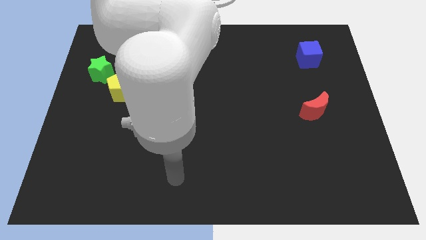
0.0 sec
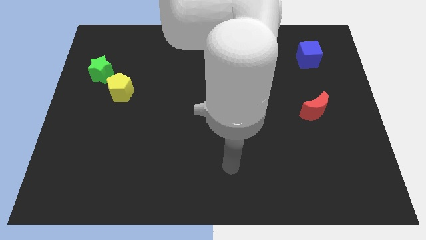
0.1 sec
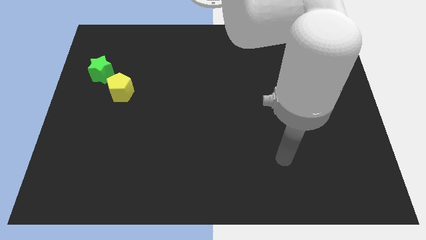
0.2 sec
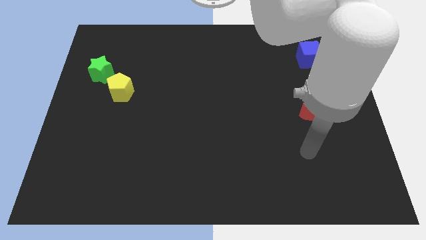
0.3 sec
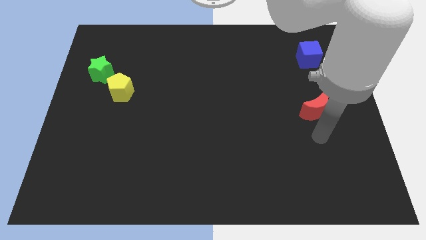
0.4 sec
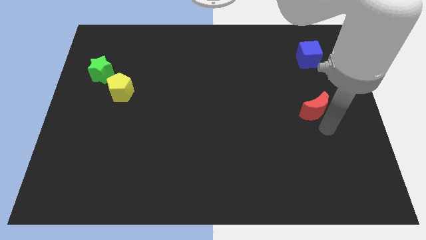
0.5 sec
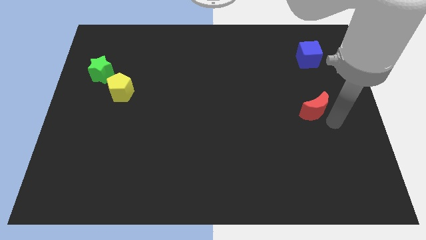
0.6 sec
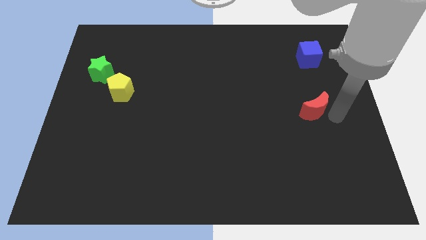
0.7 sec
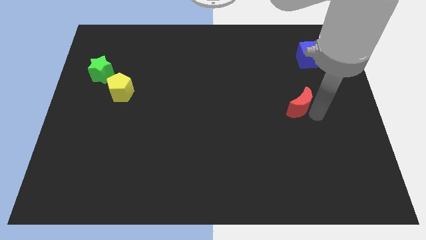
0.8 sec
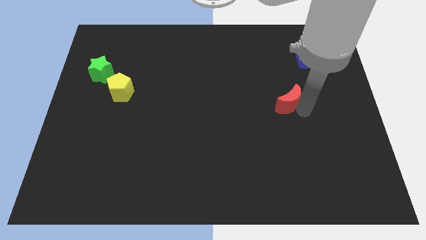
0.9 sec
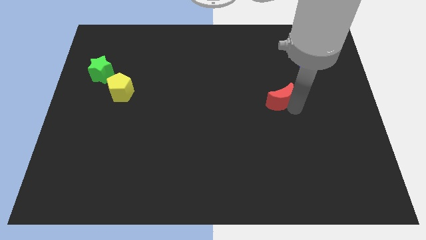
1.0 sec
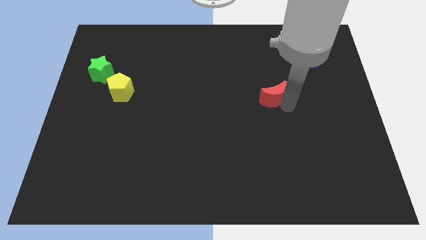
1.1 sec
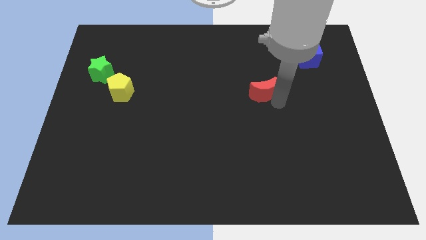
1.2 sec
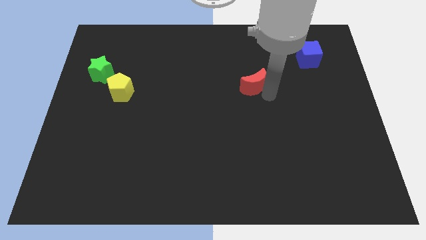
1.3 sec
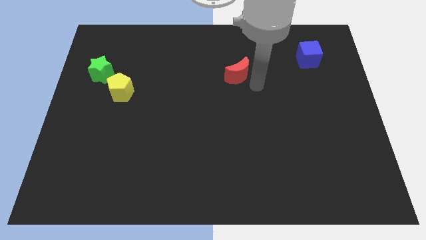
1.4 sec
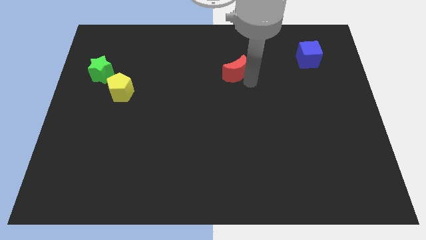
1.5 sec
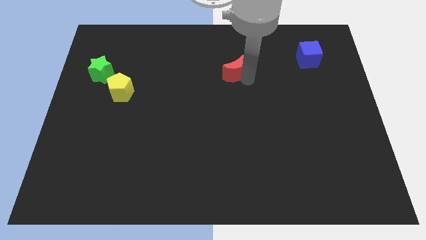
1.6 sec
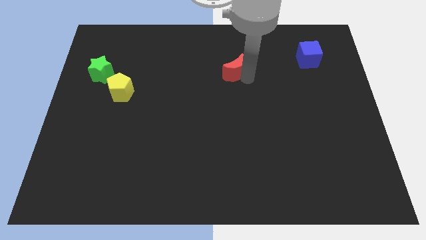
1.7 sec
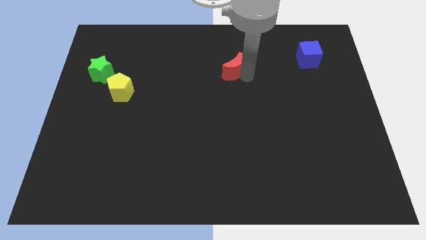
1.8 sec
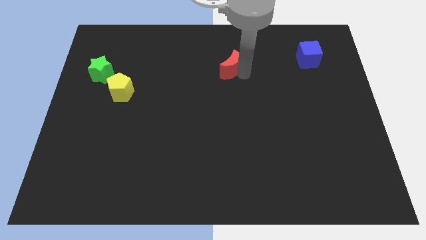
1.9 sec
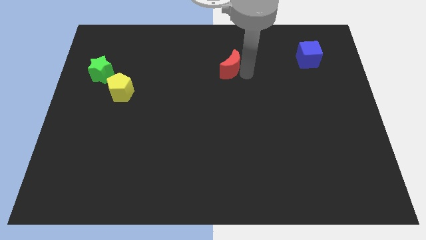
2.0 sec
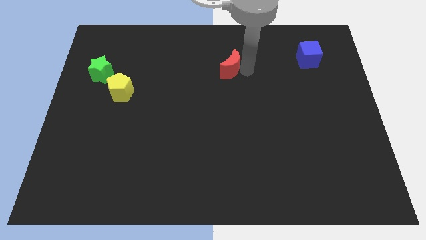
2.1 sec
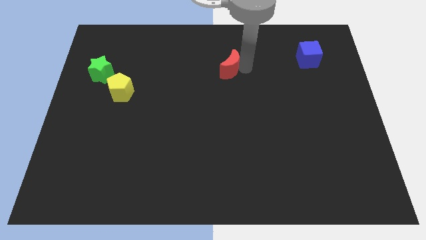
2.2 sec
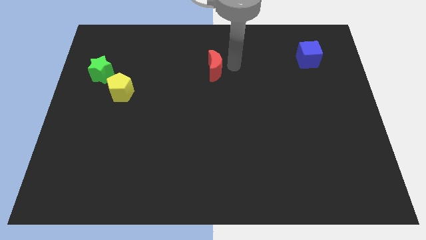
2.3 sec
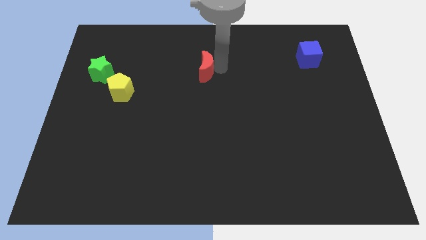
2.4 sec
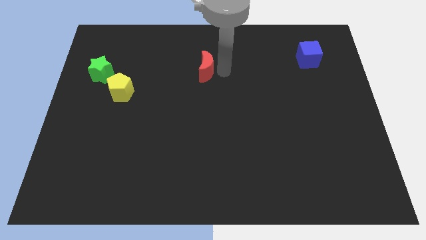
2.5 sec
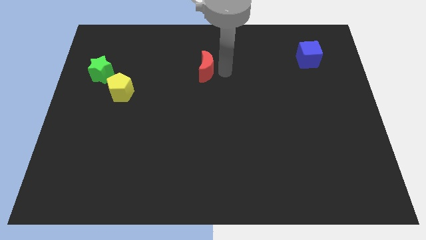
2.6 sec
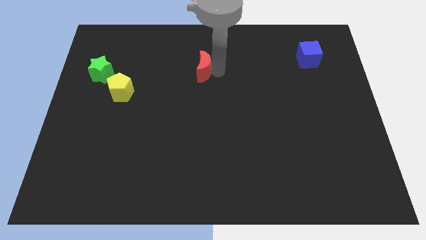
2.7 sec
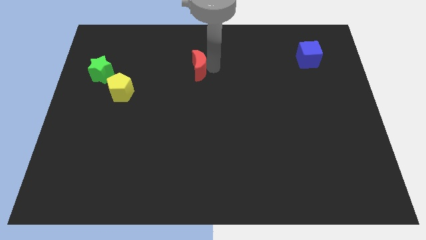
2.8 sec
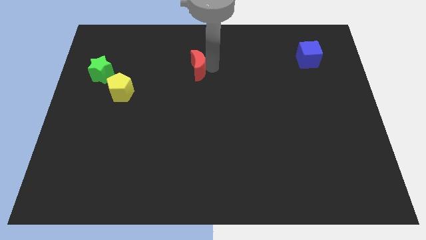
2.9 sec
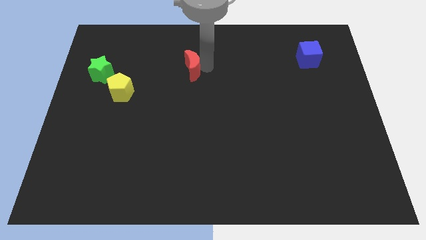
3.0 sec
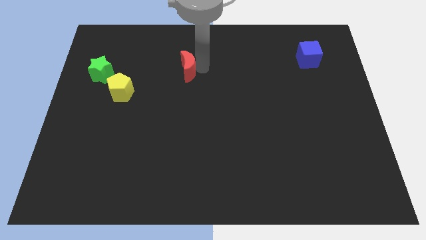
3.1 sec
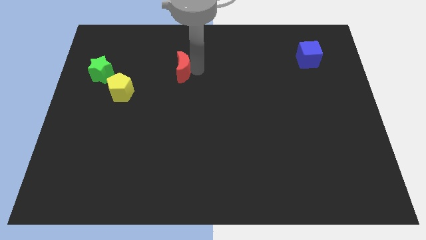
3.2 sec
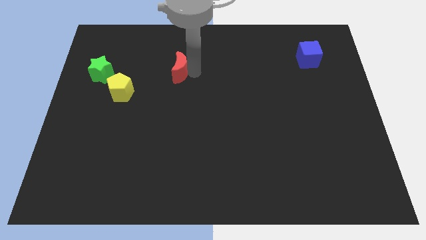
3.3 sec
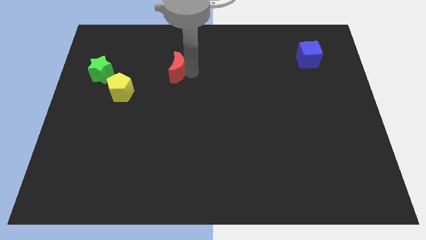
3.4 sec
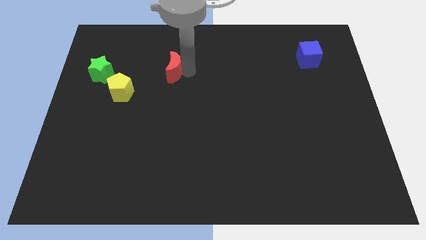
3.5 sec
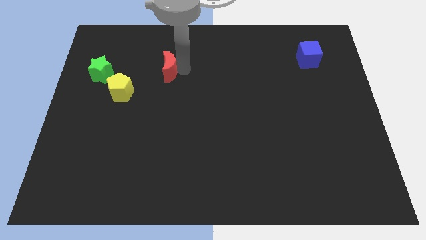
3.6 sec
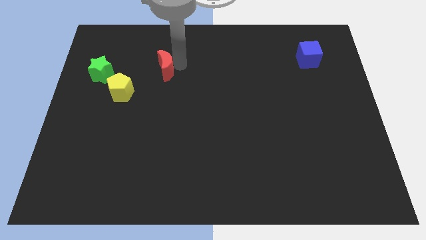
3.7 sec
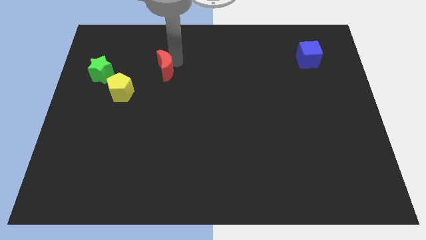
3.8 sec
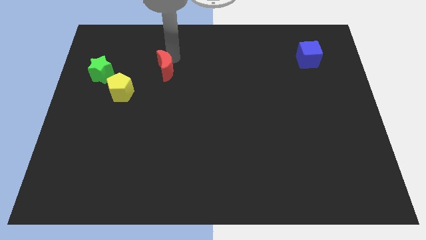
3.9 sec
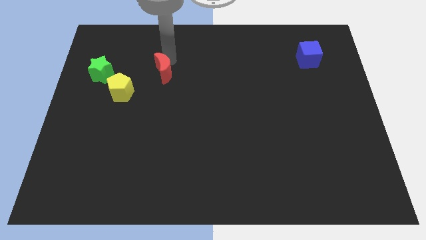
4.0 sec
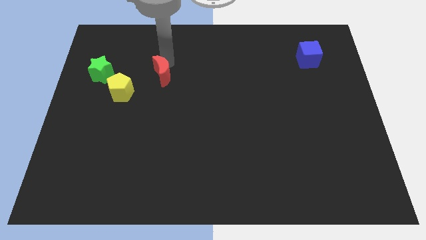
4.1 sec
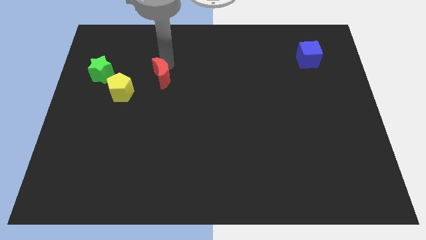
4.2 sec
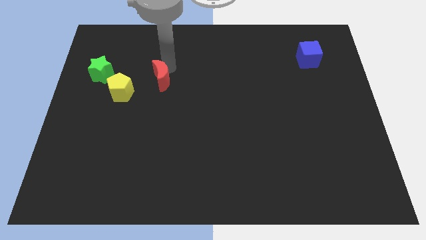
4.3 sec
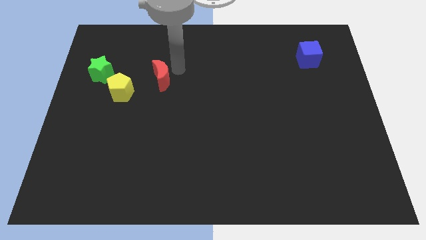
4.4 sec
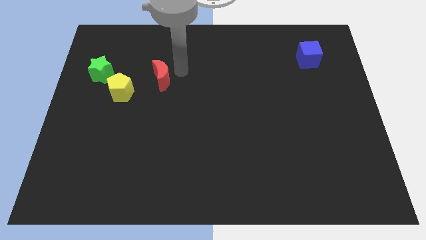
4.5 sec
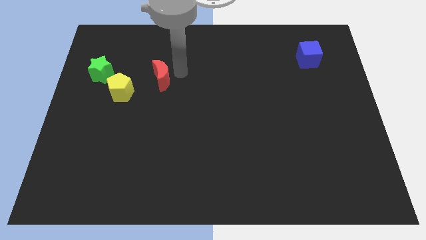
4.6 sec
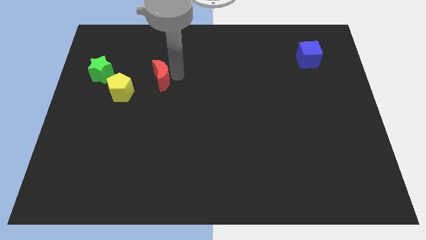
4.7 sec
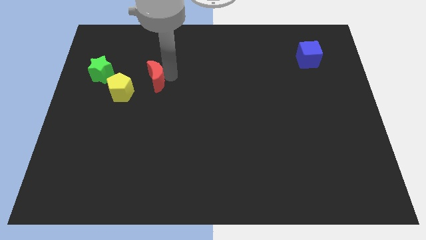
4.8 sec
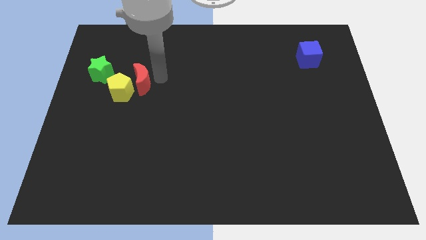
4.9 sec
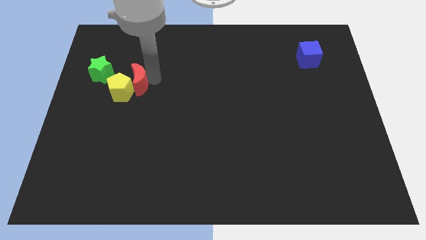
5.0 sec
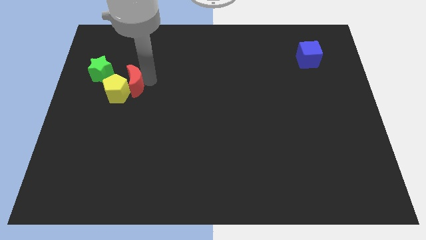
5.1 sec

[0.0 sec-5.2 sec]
push the red moon next to the yellow block

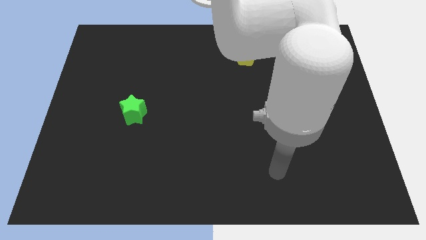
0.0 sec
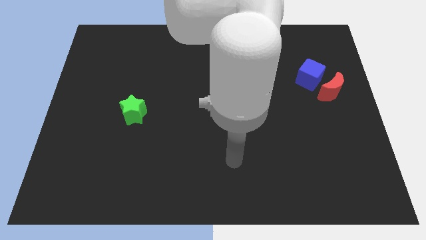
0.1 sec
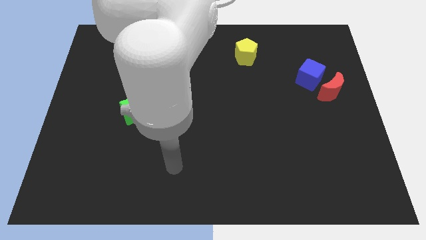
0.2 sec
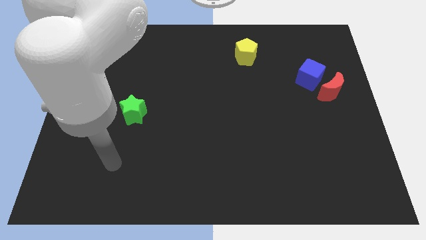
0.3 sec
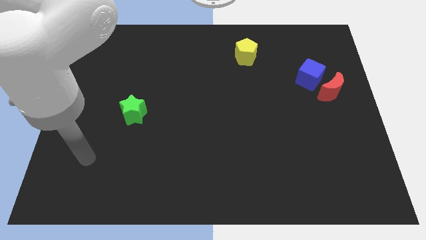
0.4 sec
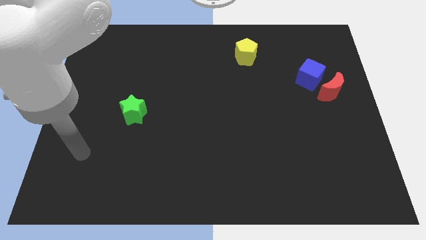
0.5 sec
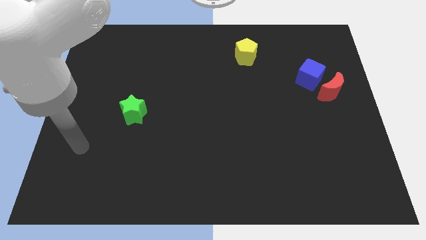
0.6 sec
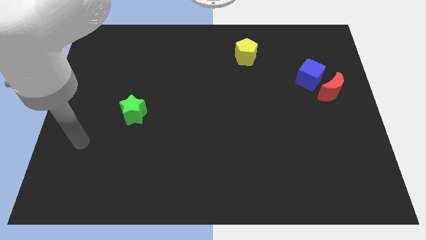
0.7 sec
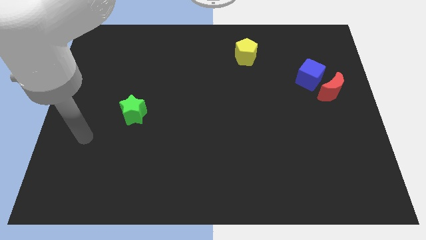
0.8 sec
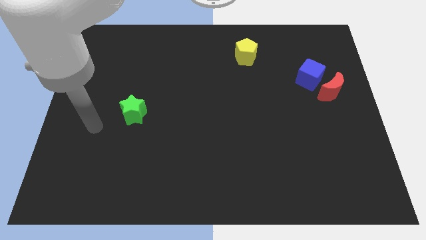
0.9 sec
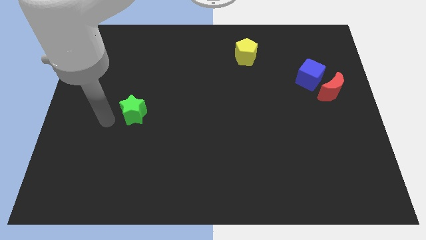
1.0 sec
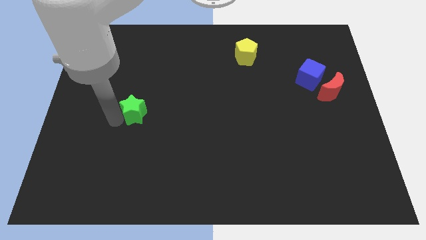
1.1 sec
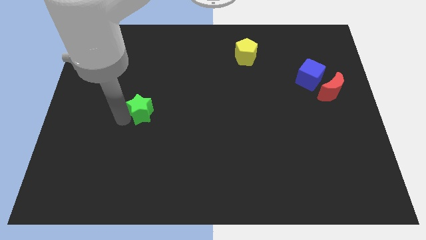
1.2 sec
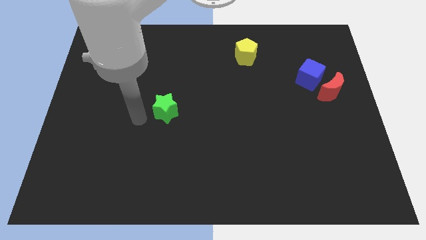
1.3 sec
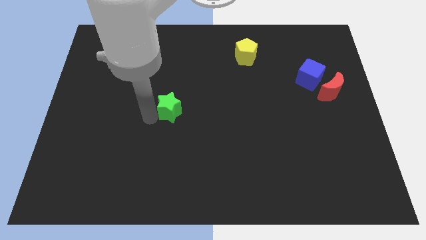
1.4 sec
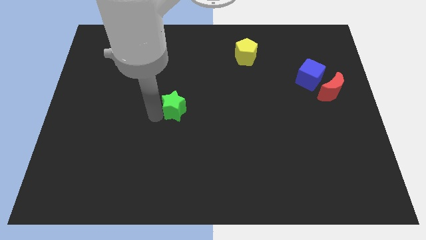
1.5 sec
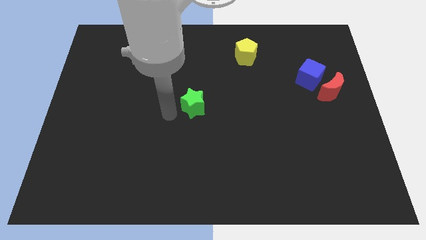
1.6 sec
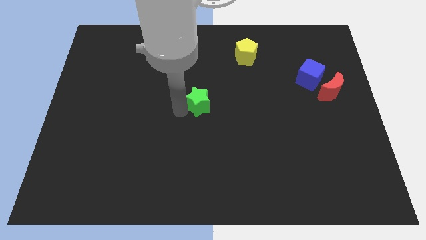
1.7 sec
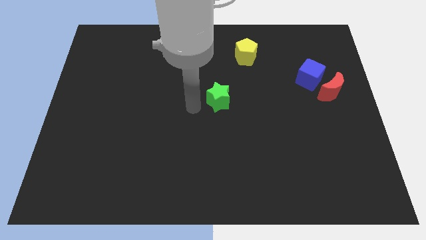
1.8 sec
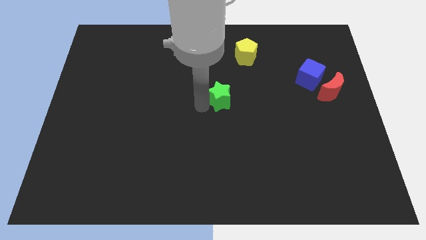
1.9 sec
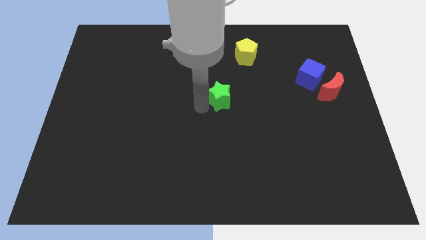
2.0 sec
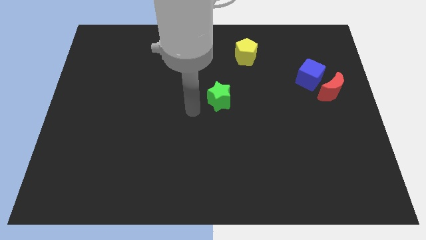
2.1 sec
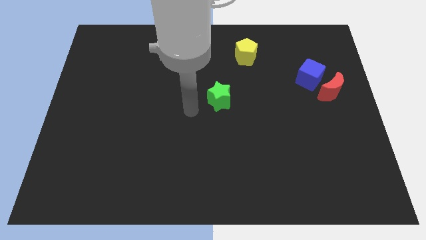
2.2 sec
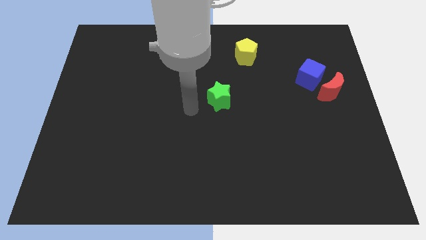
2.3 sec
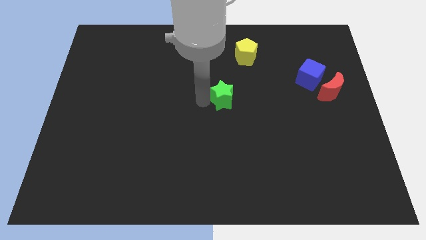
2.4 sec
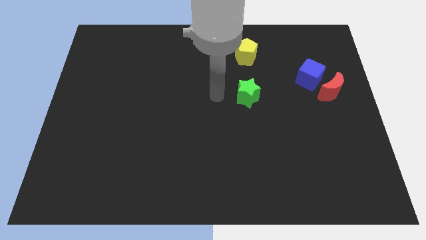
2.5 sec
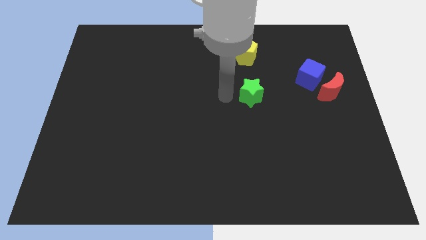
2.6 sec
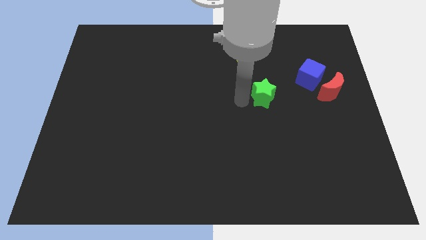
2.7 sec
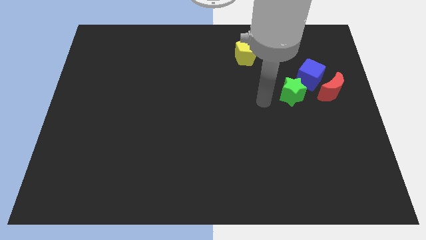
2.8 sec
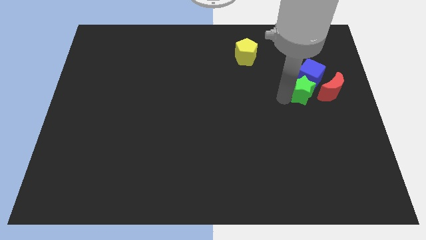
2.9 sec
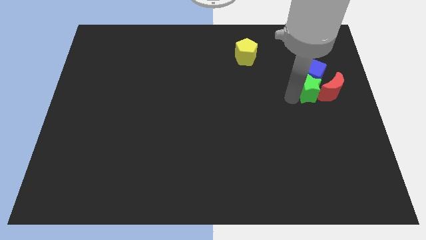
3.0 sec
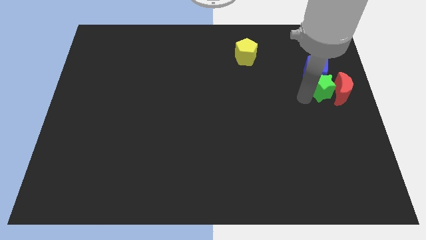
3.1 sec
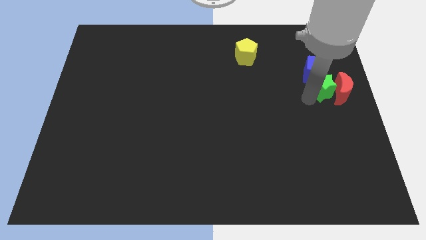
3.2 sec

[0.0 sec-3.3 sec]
push the green star towards the red moon

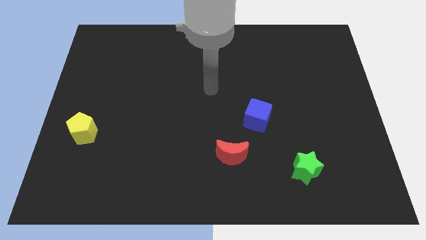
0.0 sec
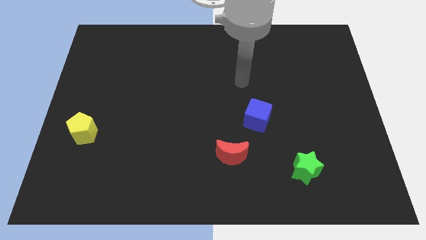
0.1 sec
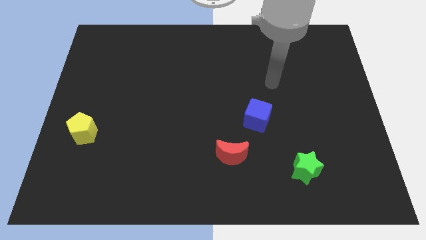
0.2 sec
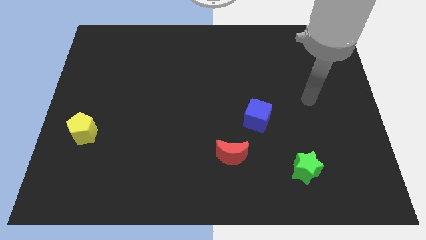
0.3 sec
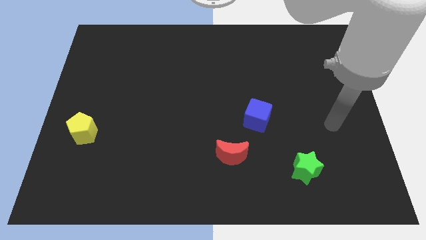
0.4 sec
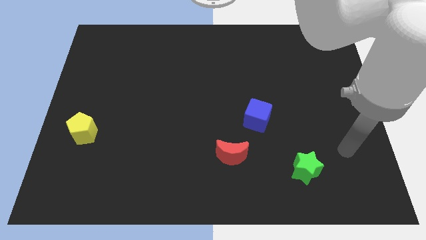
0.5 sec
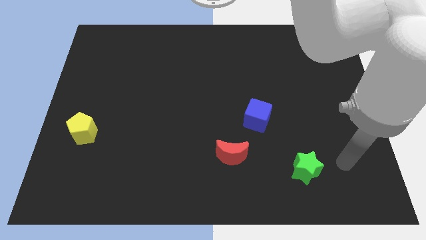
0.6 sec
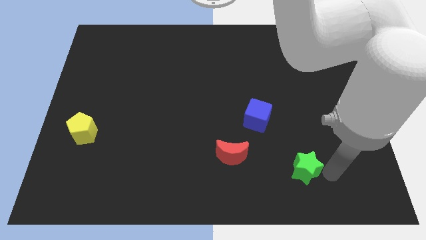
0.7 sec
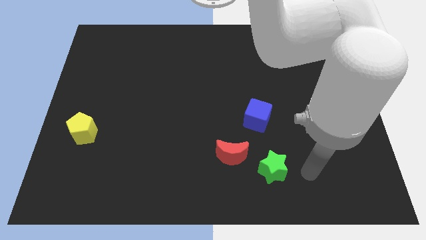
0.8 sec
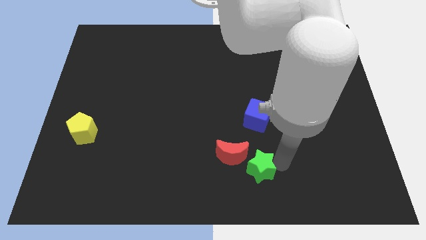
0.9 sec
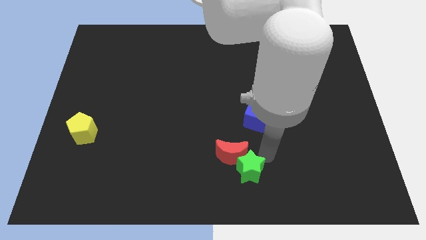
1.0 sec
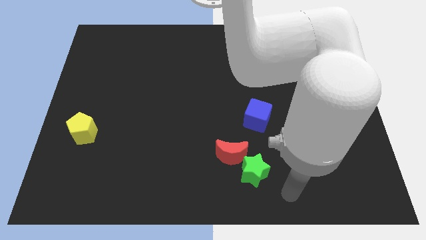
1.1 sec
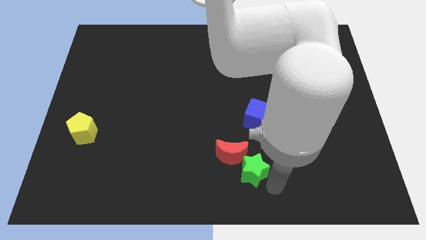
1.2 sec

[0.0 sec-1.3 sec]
put the green star to the moon
